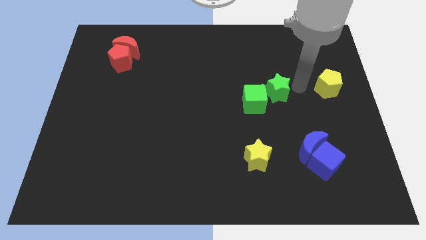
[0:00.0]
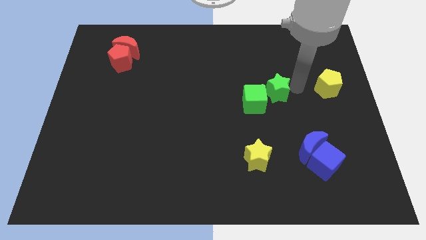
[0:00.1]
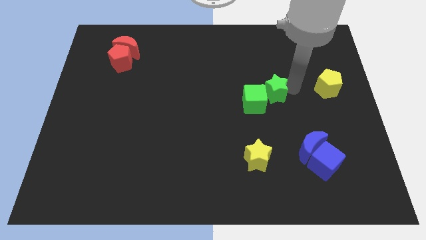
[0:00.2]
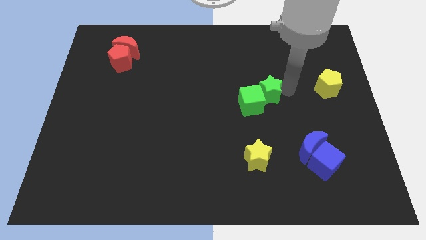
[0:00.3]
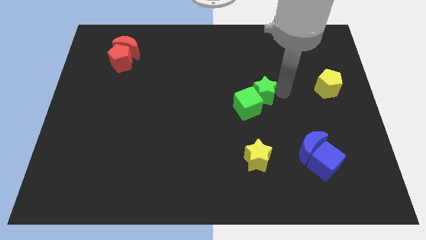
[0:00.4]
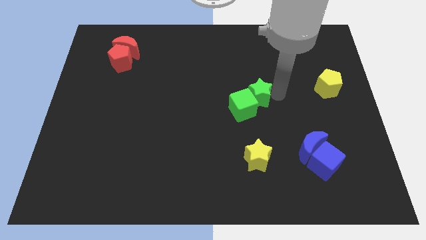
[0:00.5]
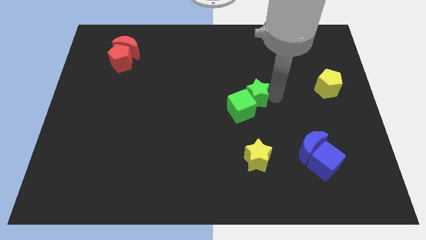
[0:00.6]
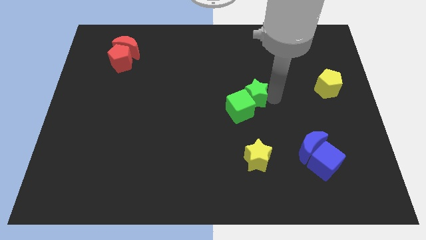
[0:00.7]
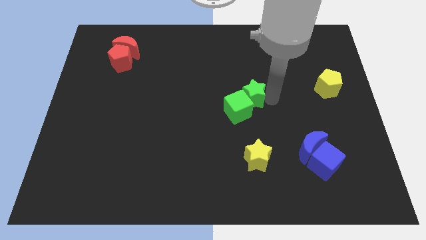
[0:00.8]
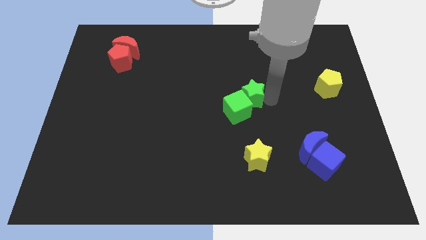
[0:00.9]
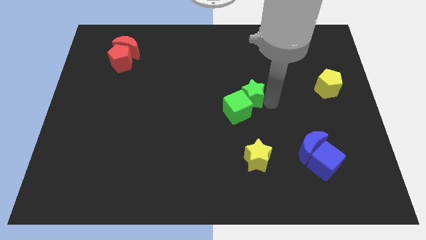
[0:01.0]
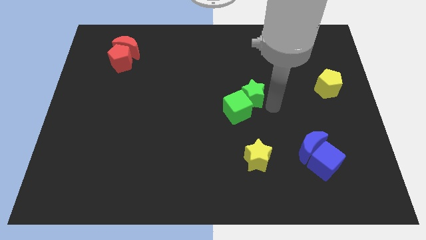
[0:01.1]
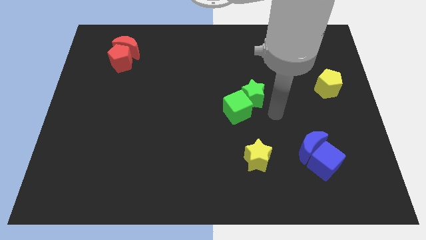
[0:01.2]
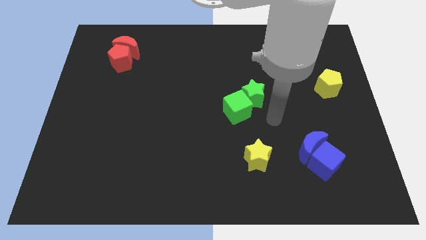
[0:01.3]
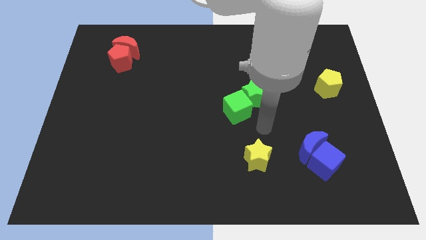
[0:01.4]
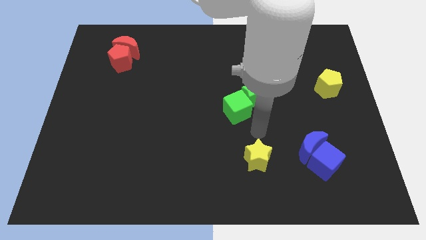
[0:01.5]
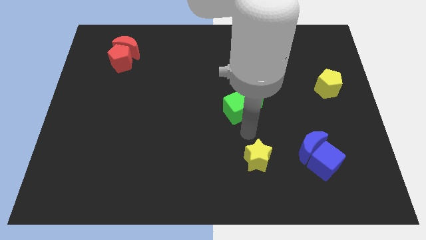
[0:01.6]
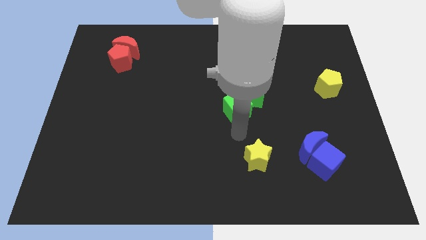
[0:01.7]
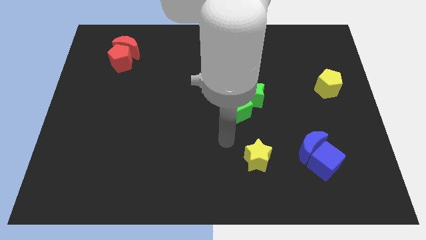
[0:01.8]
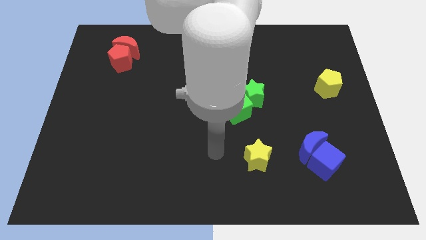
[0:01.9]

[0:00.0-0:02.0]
push the green star into the green cube

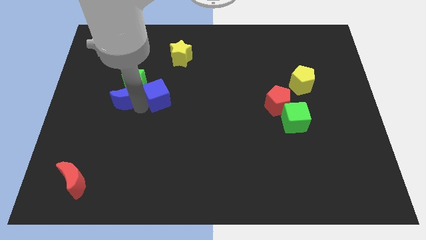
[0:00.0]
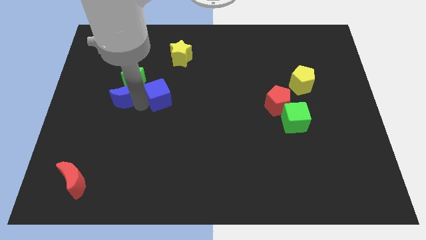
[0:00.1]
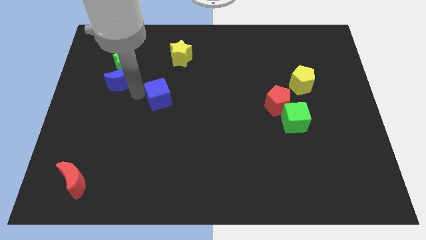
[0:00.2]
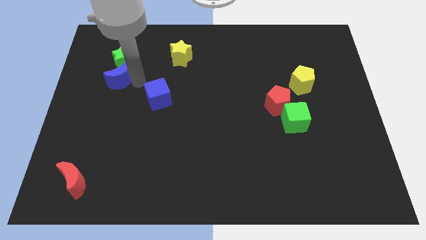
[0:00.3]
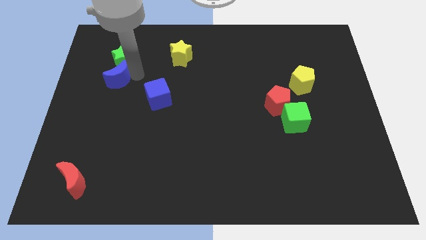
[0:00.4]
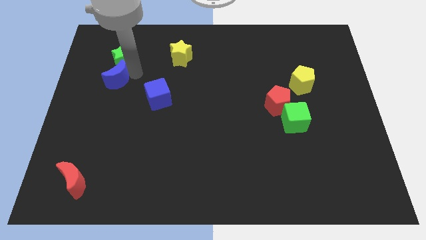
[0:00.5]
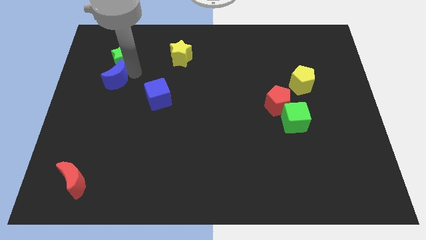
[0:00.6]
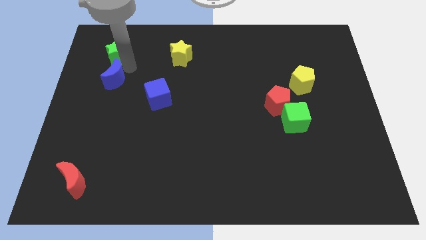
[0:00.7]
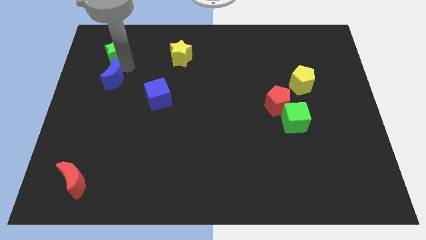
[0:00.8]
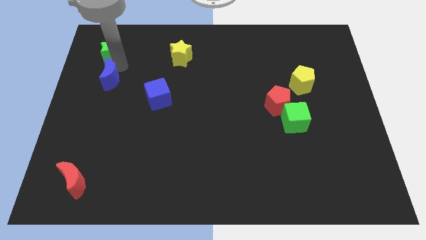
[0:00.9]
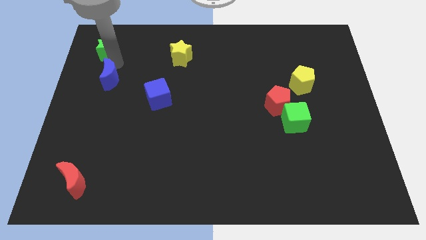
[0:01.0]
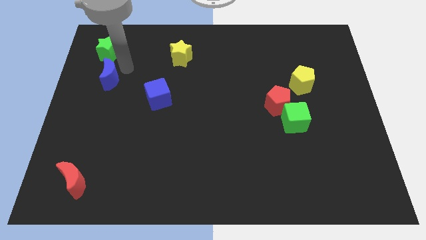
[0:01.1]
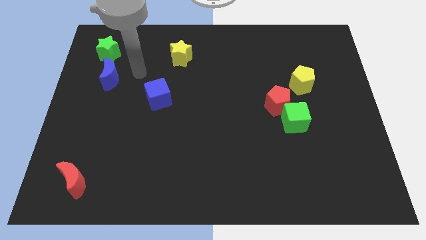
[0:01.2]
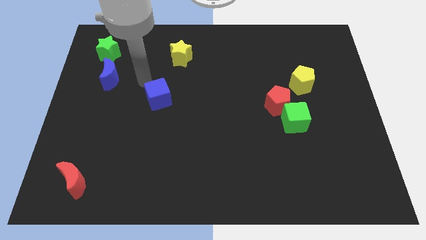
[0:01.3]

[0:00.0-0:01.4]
push the blue moon into the green star

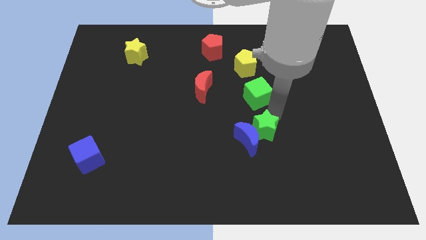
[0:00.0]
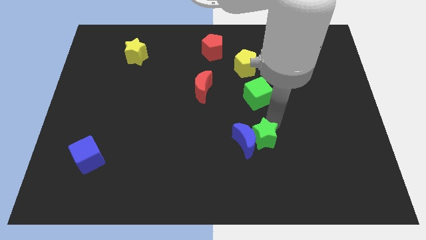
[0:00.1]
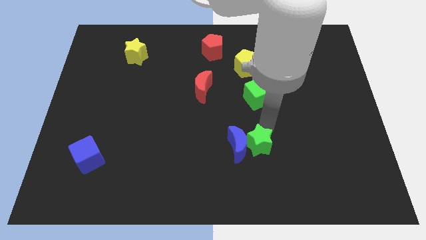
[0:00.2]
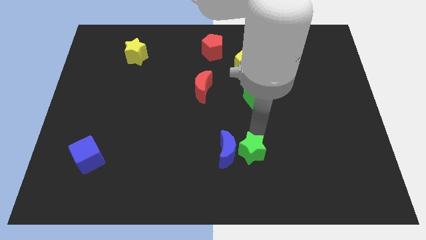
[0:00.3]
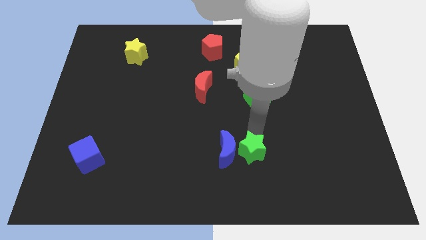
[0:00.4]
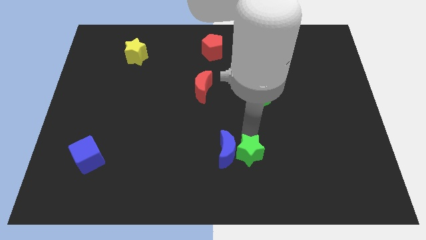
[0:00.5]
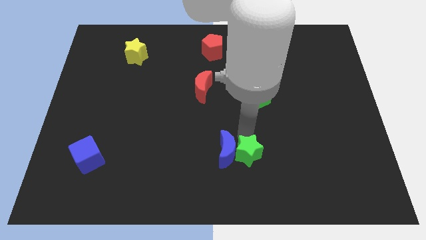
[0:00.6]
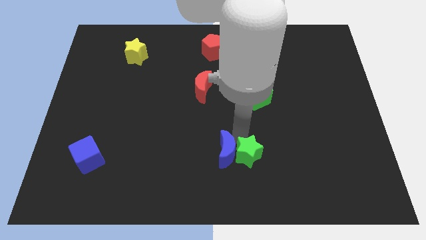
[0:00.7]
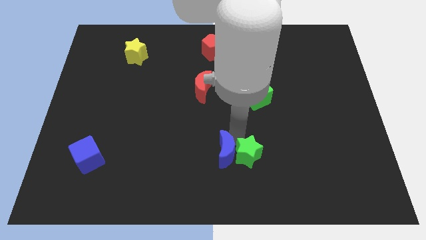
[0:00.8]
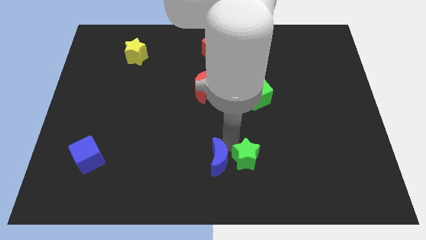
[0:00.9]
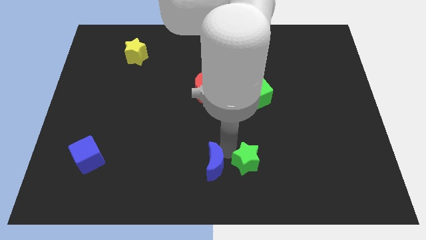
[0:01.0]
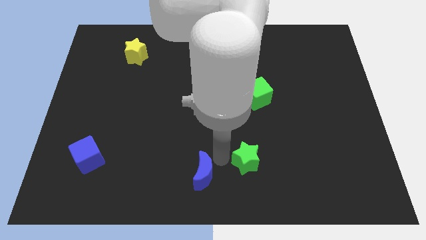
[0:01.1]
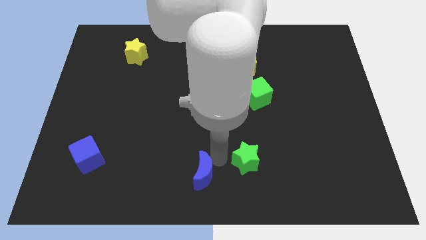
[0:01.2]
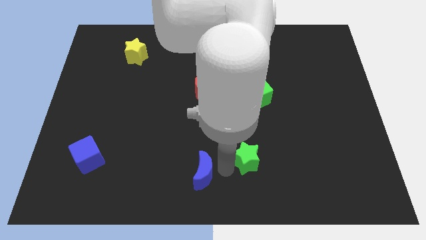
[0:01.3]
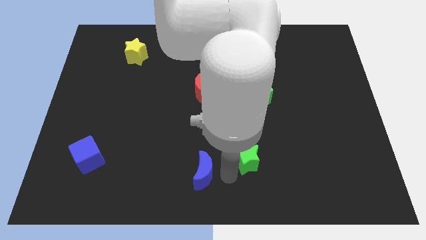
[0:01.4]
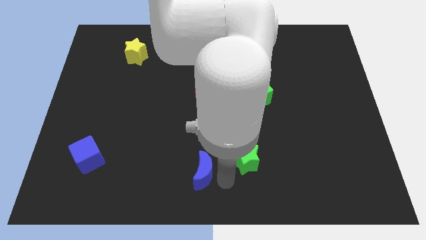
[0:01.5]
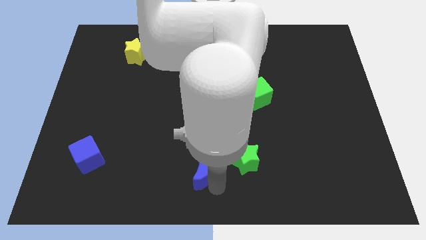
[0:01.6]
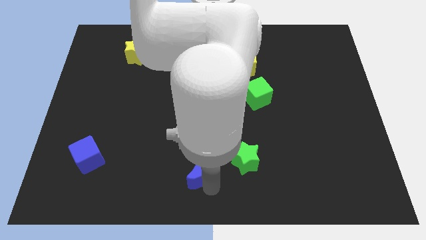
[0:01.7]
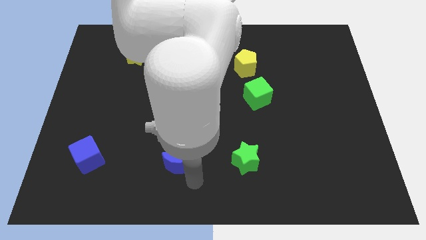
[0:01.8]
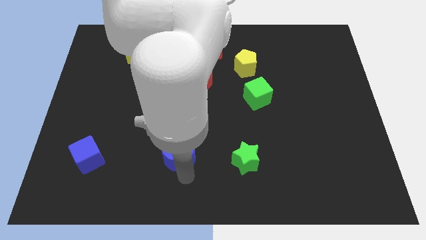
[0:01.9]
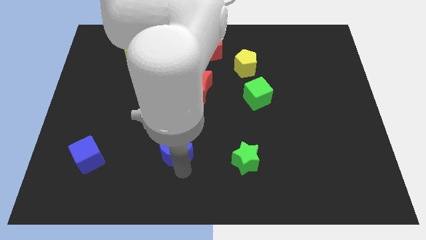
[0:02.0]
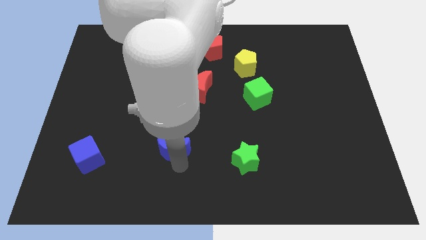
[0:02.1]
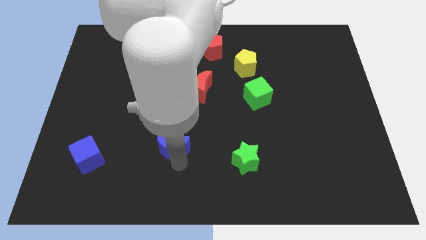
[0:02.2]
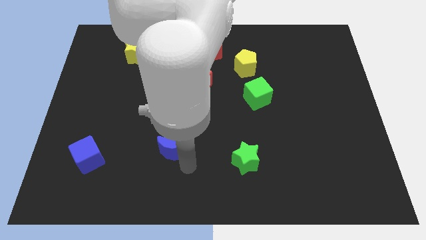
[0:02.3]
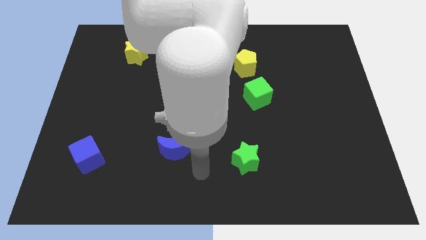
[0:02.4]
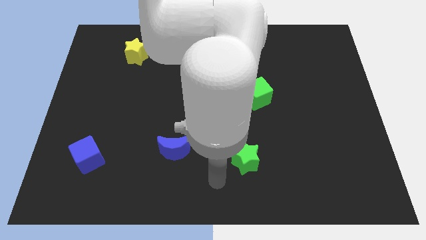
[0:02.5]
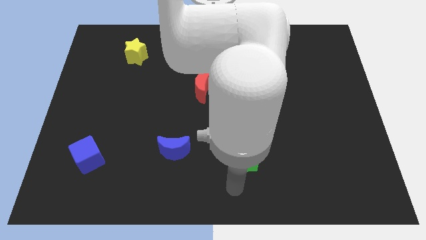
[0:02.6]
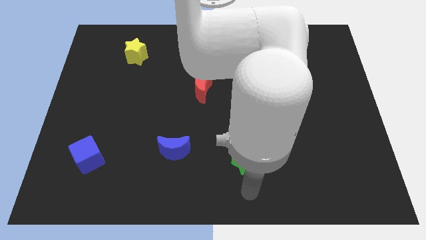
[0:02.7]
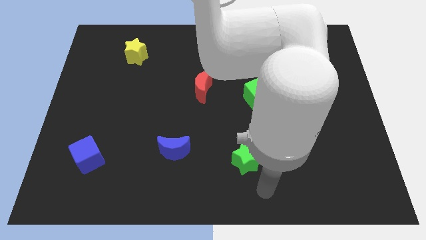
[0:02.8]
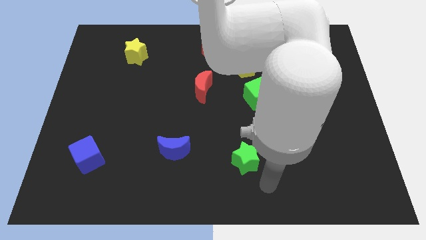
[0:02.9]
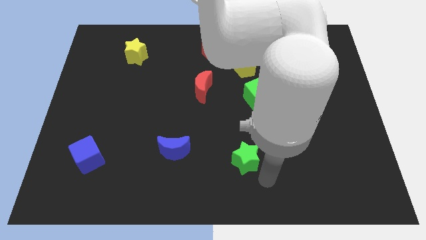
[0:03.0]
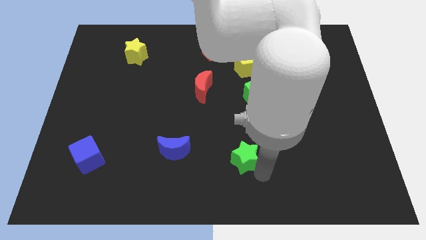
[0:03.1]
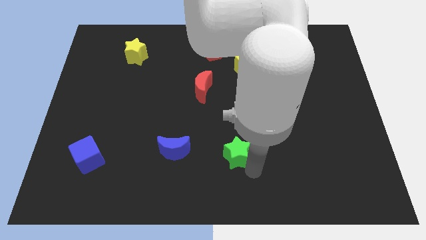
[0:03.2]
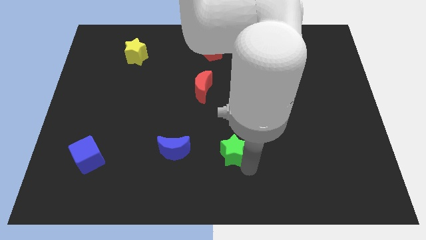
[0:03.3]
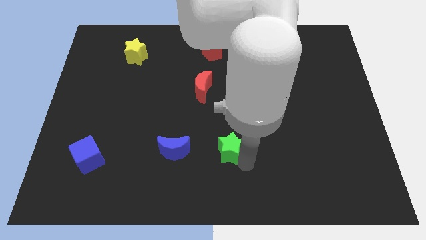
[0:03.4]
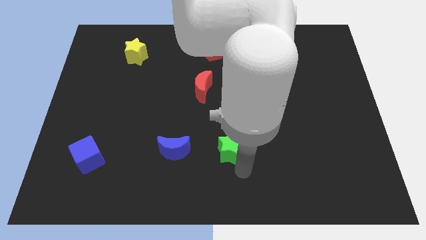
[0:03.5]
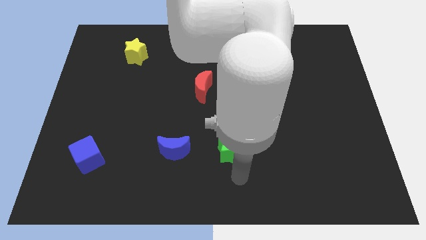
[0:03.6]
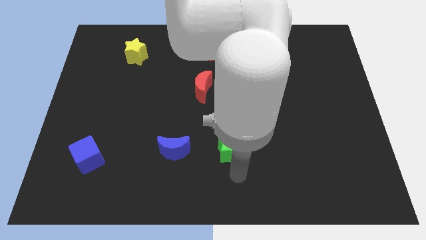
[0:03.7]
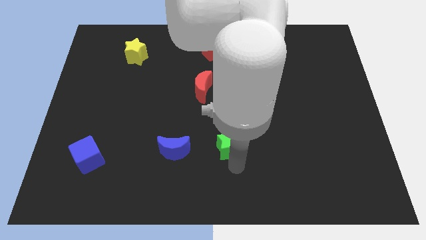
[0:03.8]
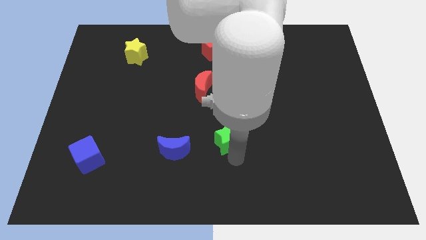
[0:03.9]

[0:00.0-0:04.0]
place the blue moon in between the green star and blue cube

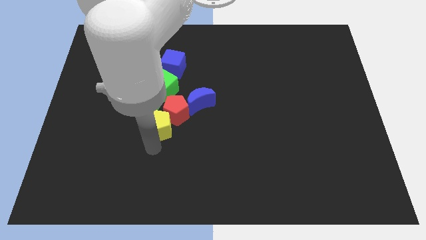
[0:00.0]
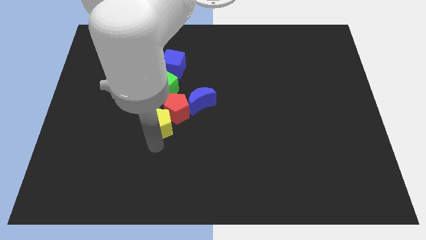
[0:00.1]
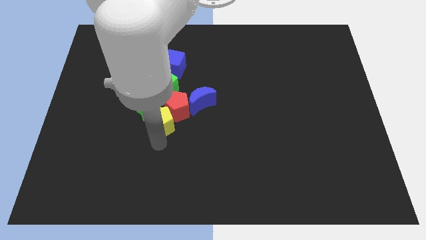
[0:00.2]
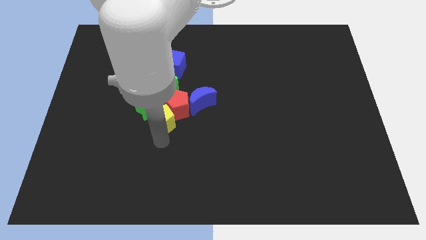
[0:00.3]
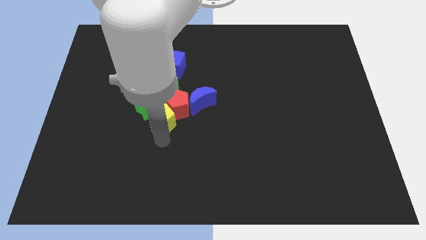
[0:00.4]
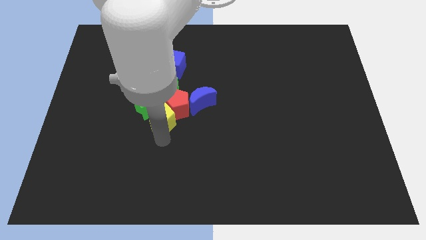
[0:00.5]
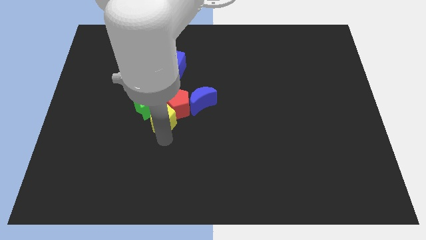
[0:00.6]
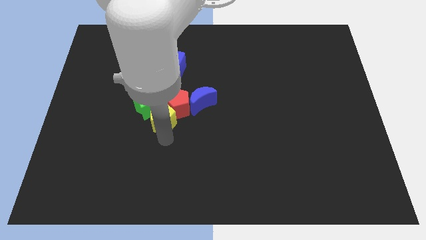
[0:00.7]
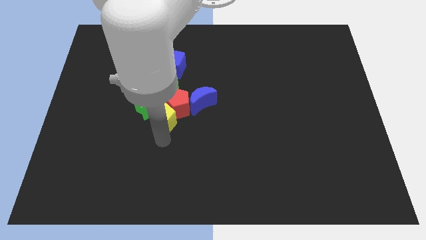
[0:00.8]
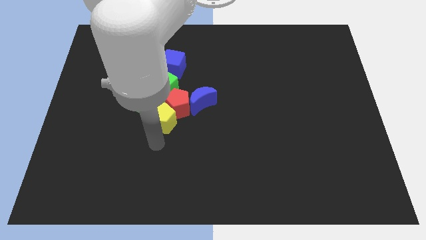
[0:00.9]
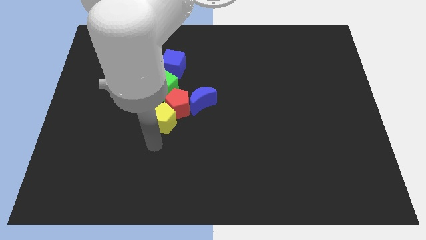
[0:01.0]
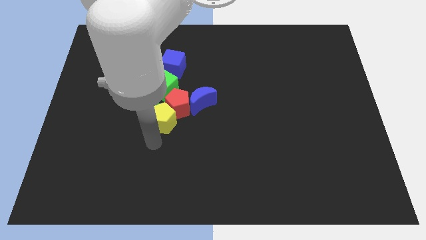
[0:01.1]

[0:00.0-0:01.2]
move the yellow pentagon into the group of blocks

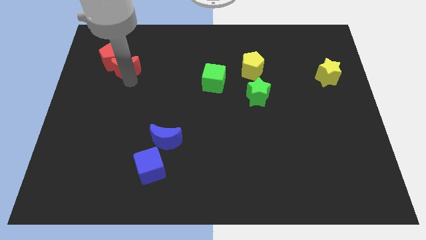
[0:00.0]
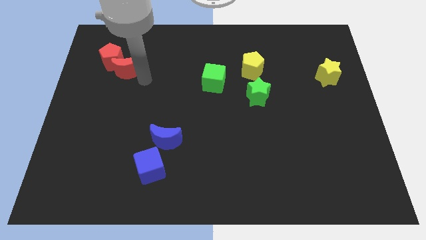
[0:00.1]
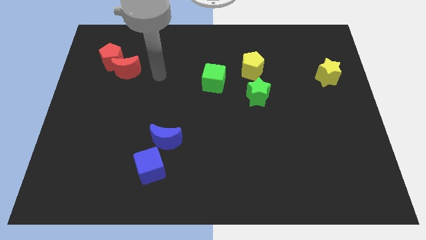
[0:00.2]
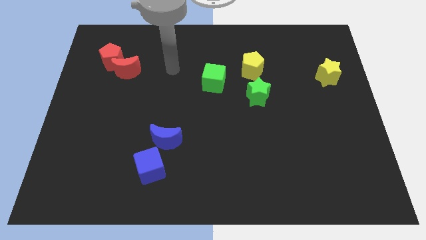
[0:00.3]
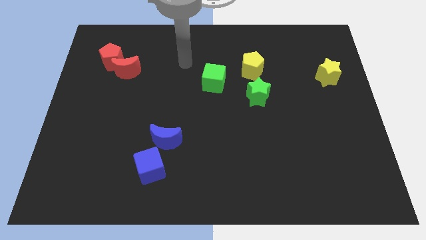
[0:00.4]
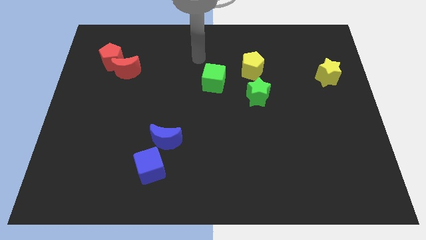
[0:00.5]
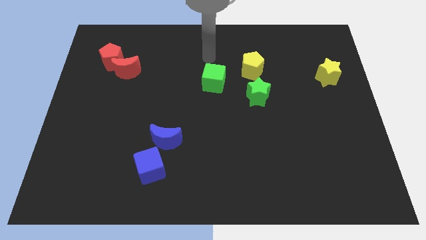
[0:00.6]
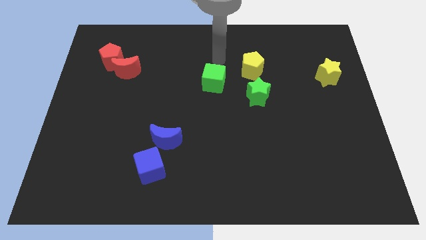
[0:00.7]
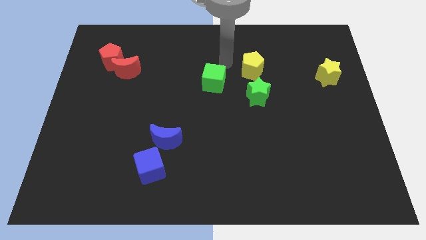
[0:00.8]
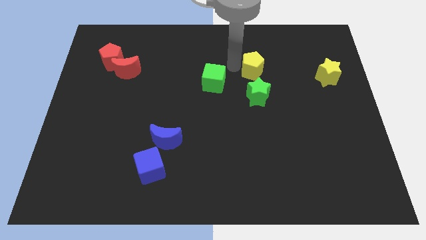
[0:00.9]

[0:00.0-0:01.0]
place your arm at the left of the yellow pentagon
